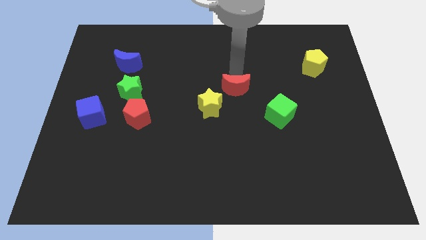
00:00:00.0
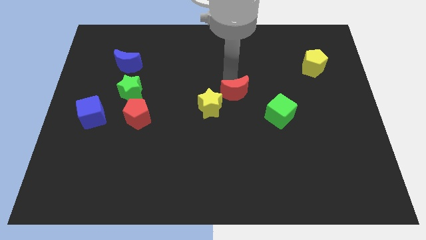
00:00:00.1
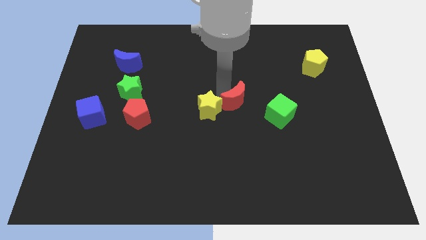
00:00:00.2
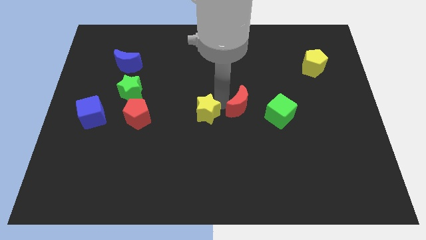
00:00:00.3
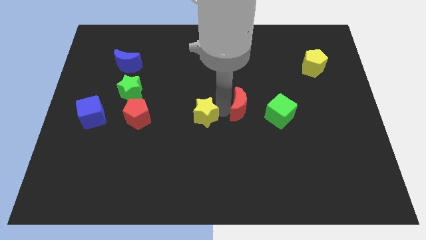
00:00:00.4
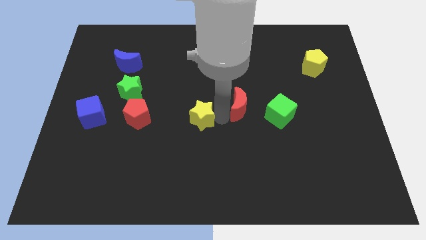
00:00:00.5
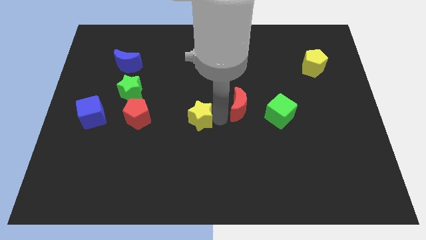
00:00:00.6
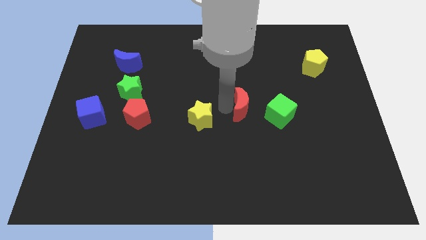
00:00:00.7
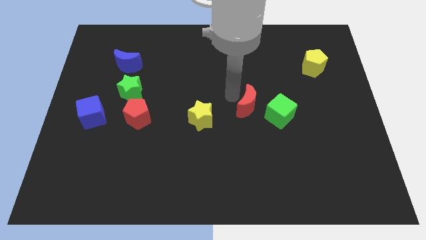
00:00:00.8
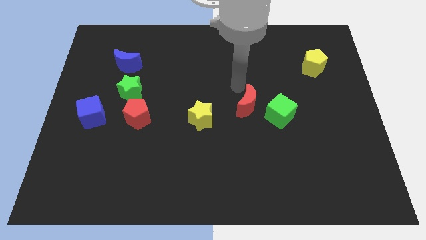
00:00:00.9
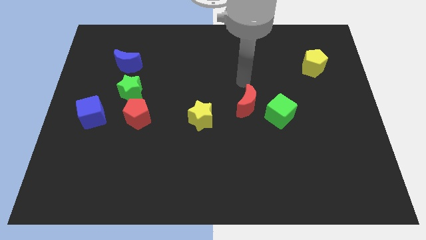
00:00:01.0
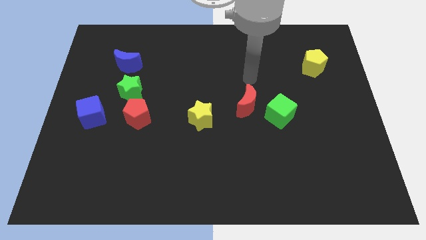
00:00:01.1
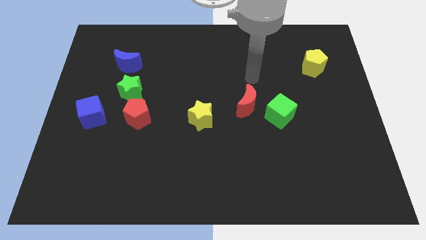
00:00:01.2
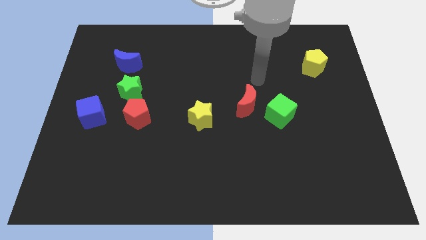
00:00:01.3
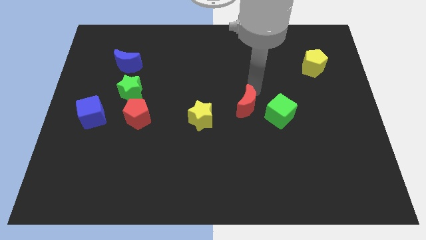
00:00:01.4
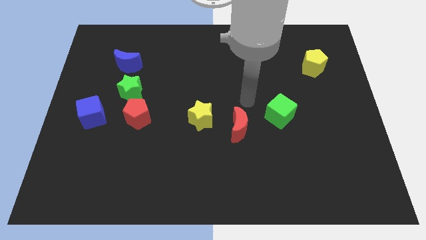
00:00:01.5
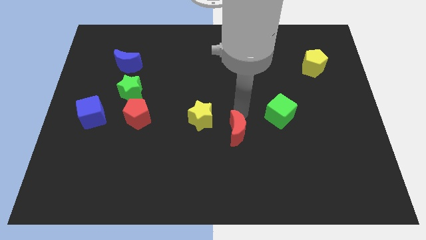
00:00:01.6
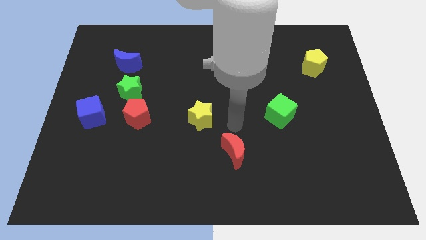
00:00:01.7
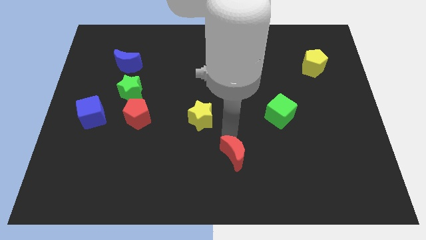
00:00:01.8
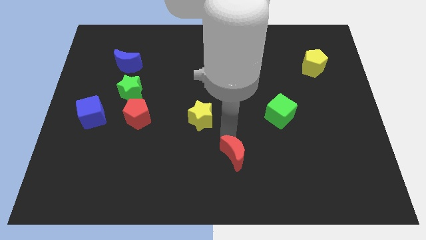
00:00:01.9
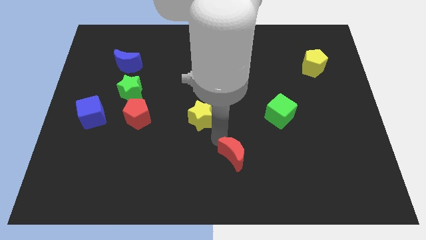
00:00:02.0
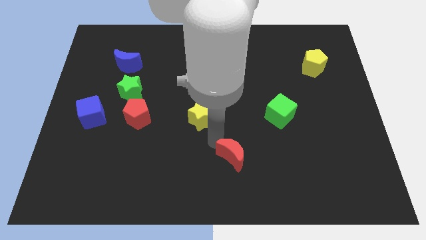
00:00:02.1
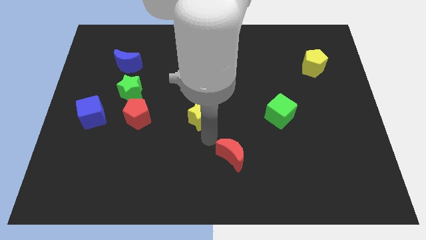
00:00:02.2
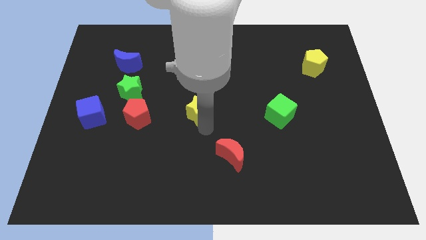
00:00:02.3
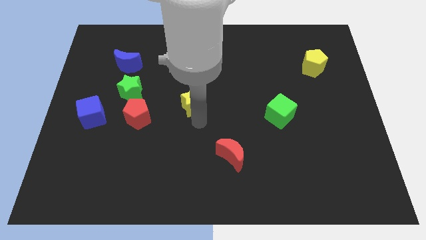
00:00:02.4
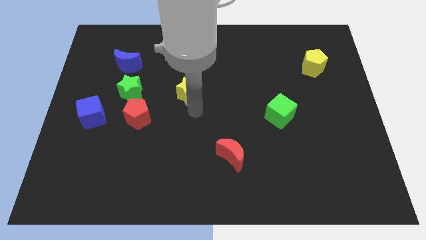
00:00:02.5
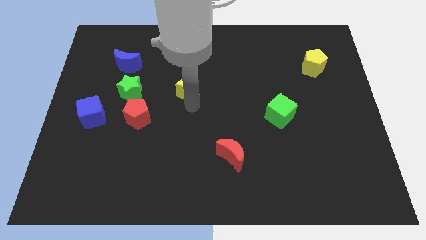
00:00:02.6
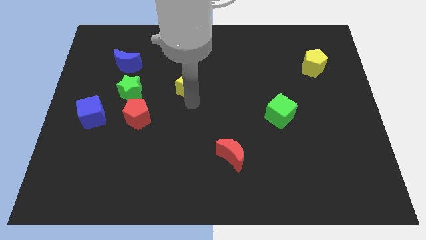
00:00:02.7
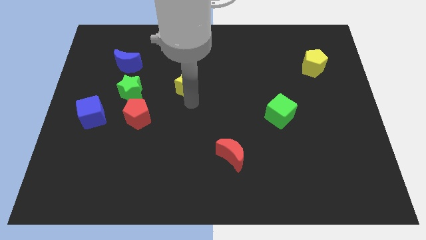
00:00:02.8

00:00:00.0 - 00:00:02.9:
move the yellow star away from the red moon

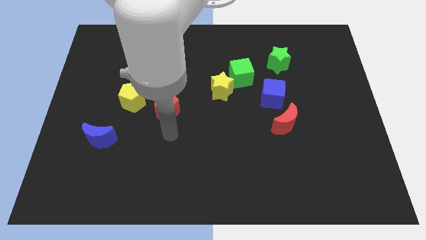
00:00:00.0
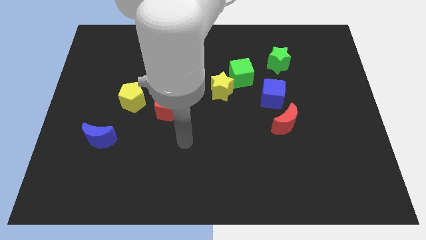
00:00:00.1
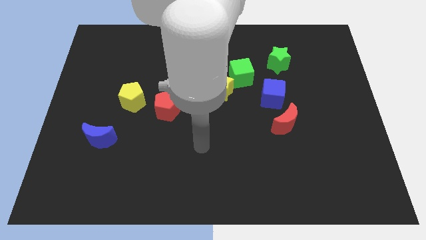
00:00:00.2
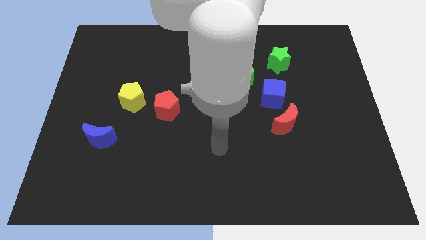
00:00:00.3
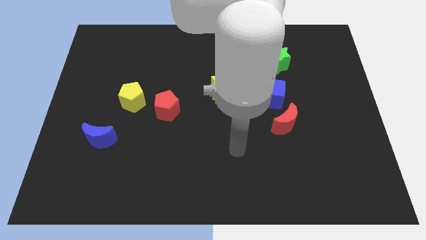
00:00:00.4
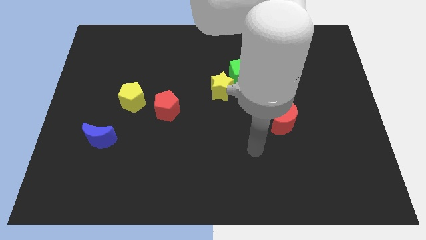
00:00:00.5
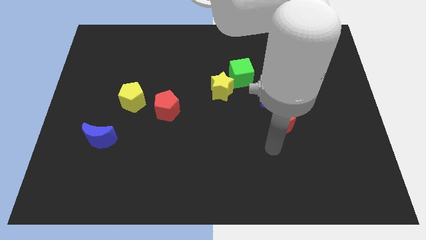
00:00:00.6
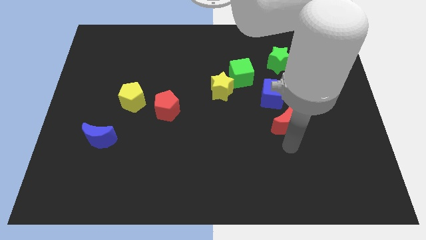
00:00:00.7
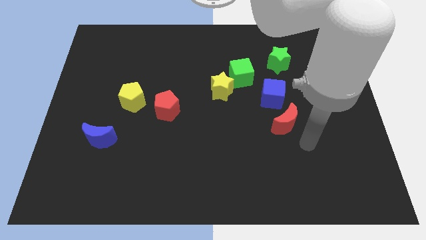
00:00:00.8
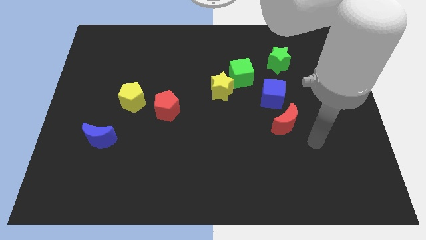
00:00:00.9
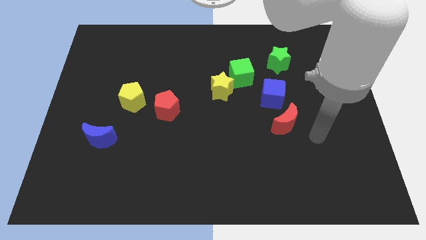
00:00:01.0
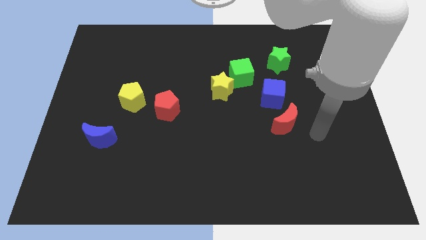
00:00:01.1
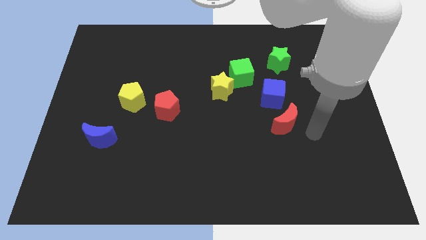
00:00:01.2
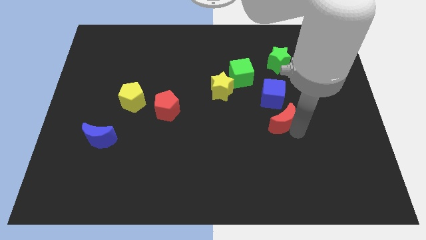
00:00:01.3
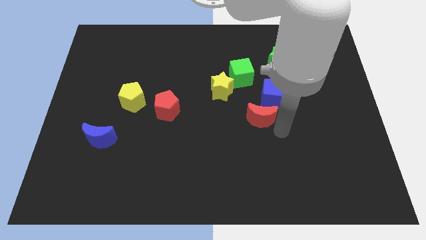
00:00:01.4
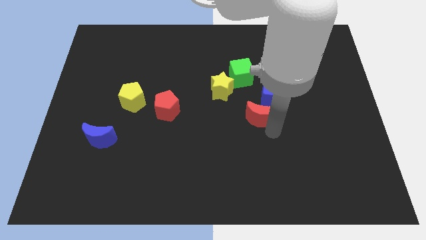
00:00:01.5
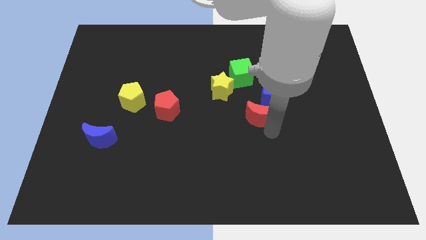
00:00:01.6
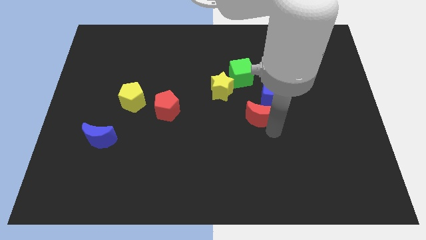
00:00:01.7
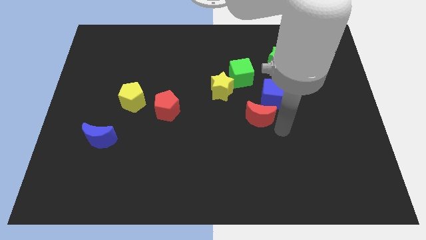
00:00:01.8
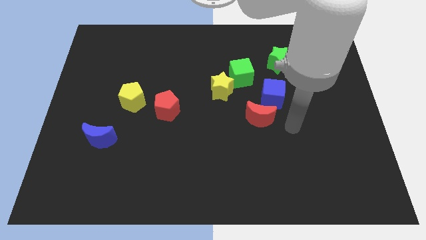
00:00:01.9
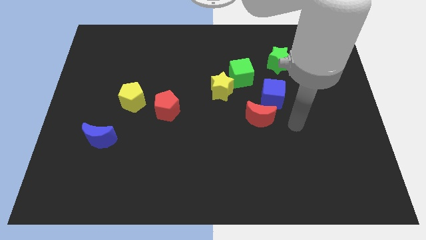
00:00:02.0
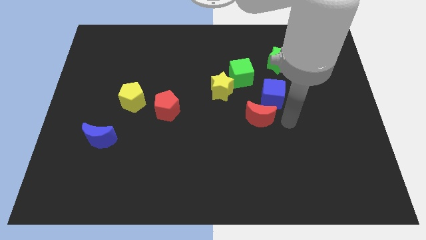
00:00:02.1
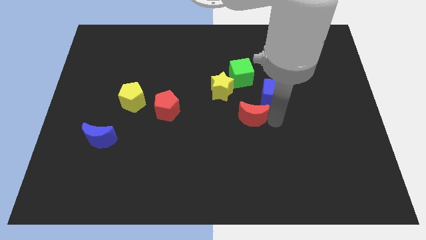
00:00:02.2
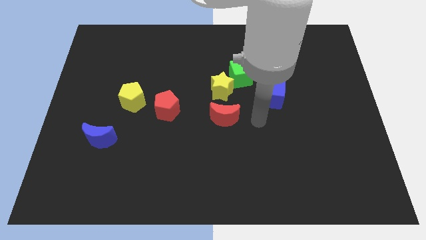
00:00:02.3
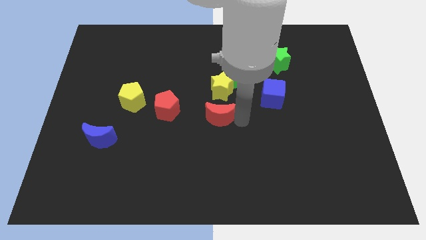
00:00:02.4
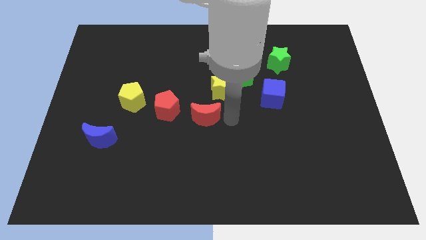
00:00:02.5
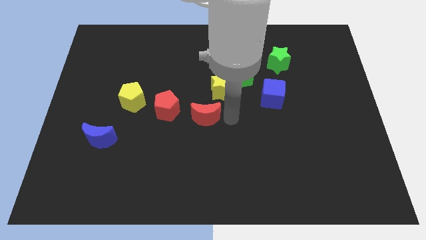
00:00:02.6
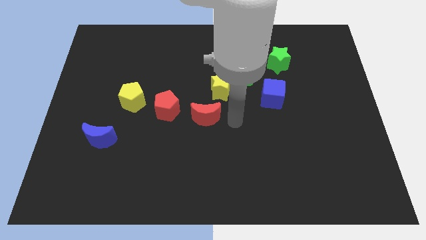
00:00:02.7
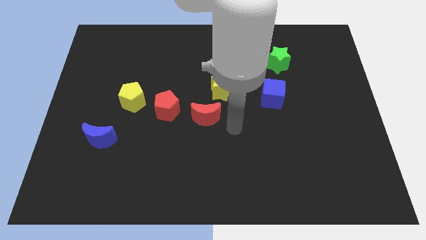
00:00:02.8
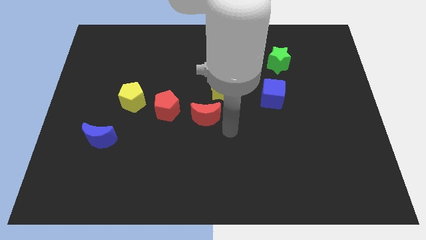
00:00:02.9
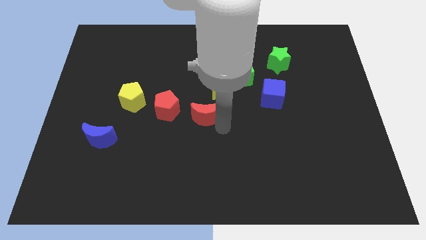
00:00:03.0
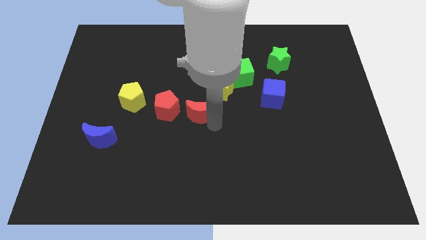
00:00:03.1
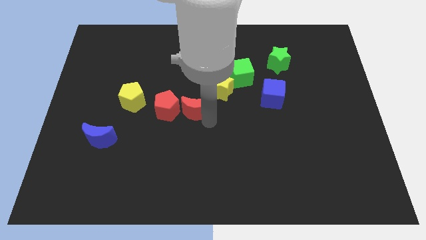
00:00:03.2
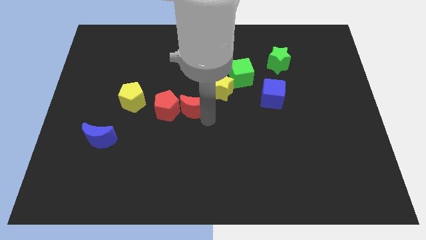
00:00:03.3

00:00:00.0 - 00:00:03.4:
place the red crescent right to the red pentagon

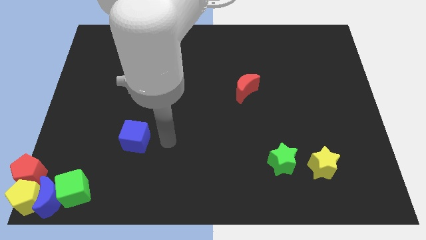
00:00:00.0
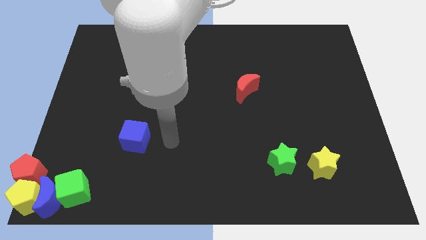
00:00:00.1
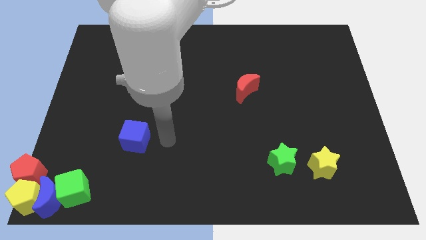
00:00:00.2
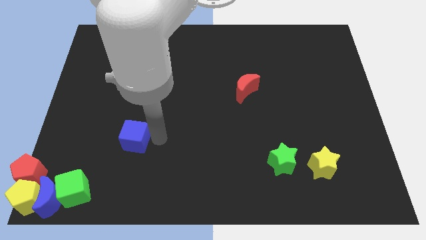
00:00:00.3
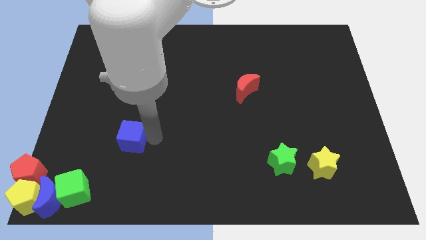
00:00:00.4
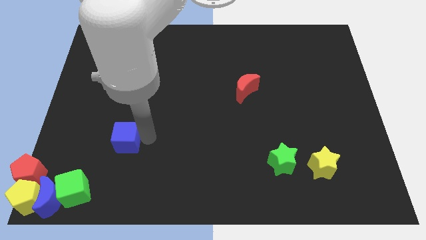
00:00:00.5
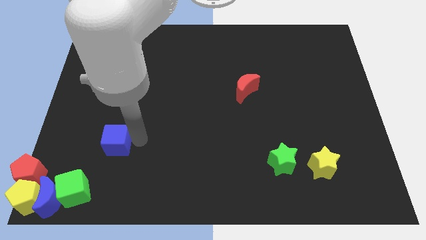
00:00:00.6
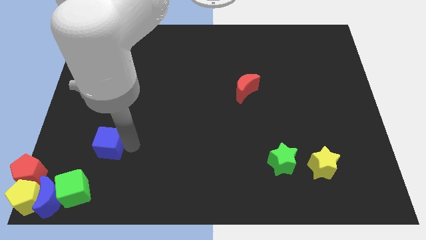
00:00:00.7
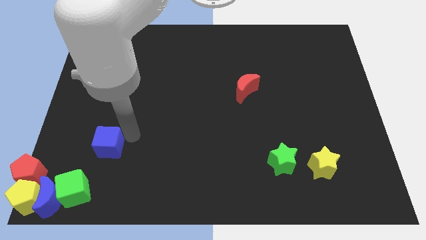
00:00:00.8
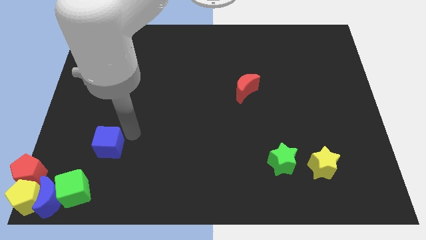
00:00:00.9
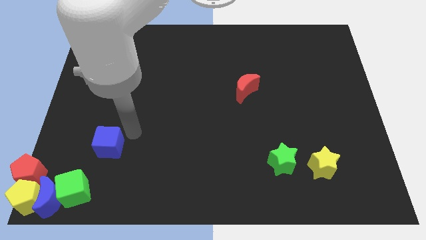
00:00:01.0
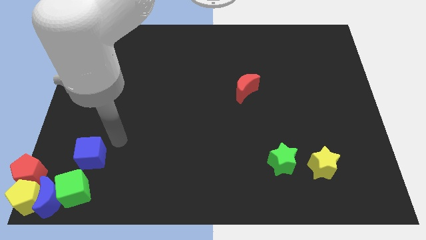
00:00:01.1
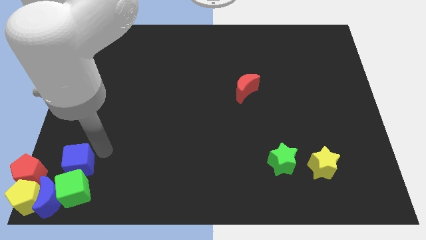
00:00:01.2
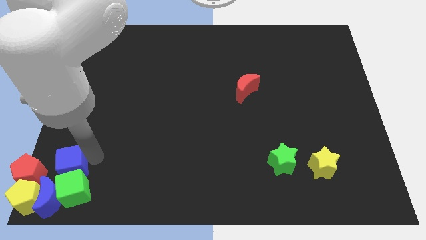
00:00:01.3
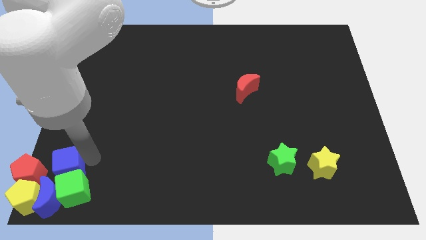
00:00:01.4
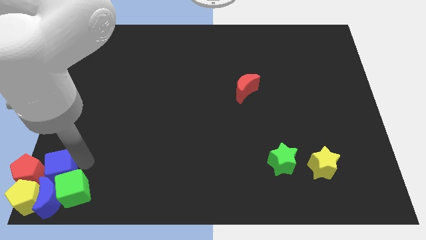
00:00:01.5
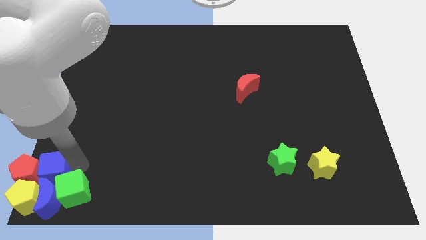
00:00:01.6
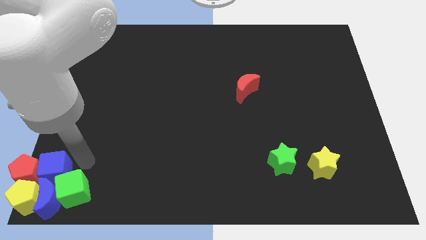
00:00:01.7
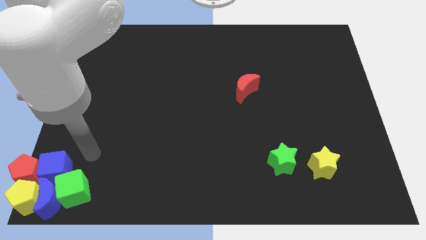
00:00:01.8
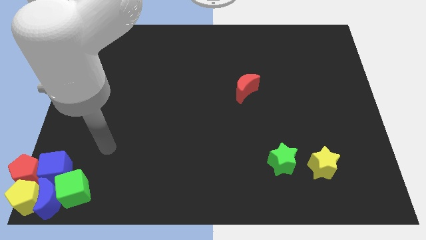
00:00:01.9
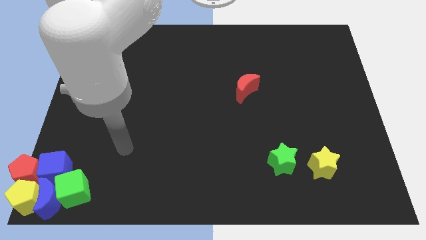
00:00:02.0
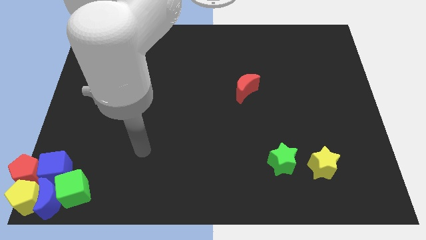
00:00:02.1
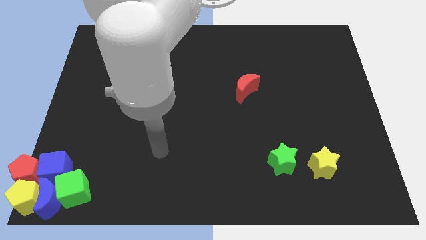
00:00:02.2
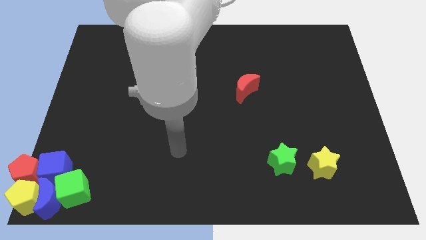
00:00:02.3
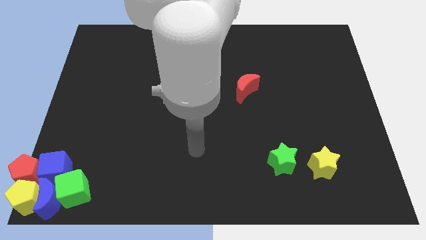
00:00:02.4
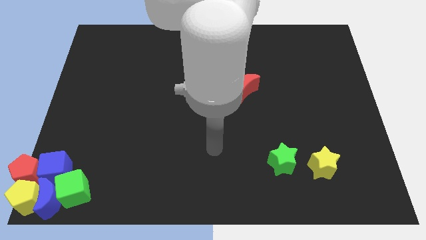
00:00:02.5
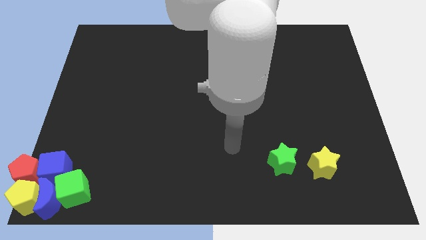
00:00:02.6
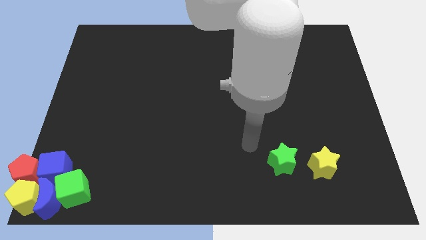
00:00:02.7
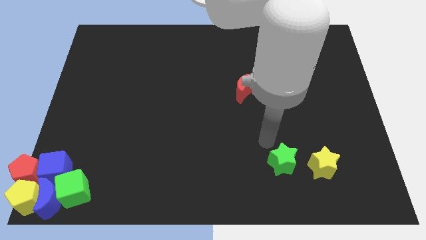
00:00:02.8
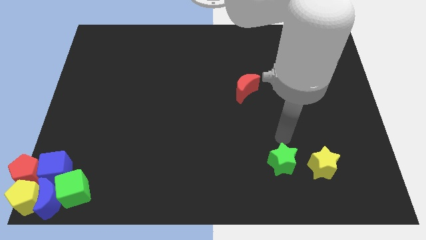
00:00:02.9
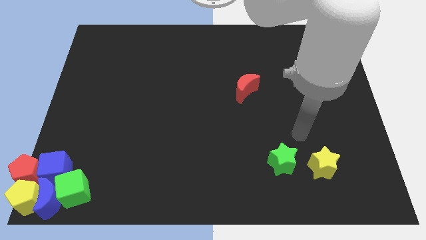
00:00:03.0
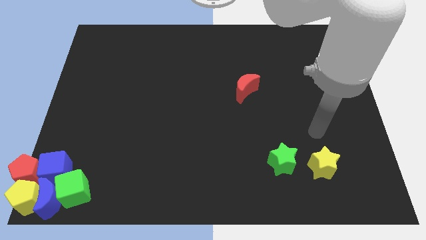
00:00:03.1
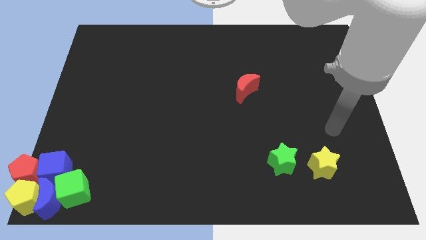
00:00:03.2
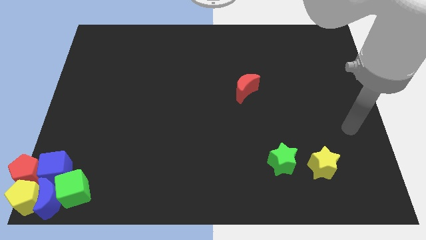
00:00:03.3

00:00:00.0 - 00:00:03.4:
move blue cube to the top of blue moon
